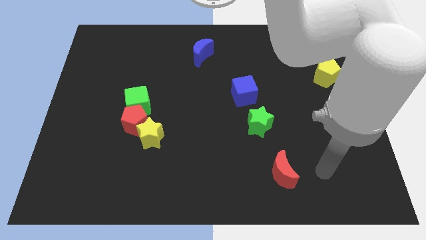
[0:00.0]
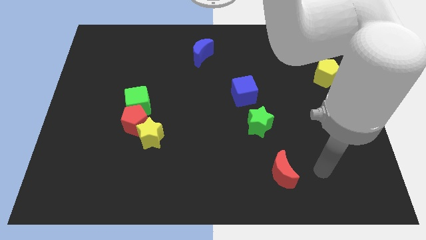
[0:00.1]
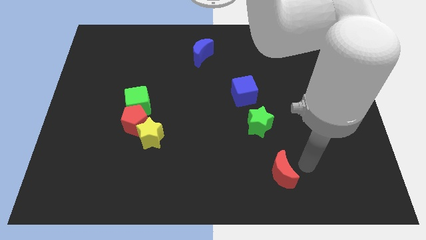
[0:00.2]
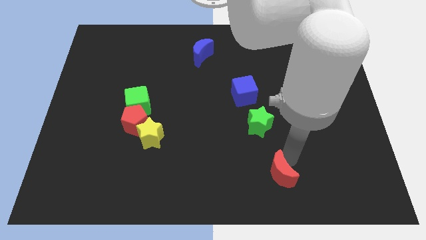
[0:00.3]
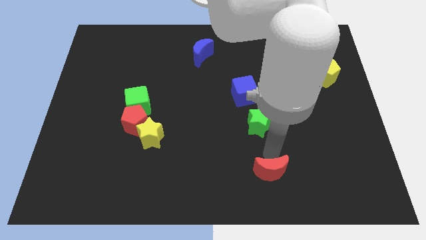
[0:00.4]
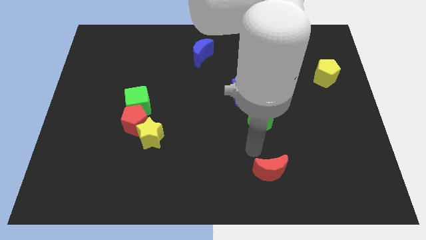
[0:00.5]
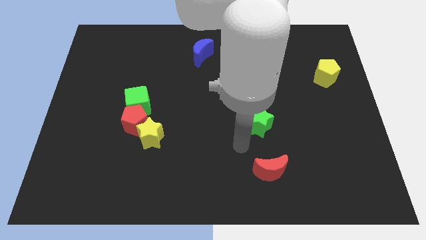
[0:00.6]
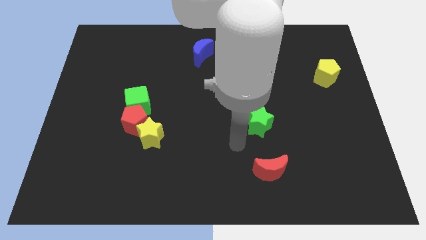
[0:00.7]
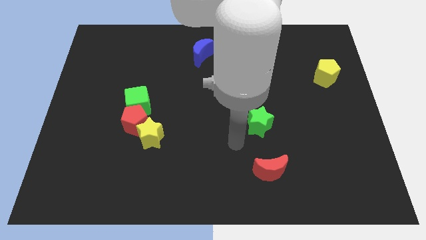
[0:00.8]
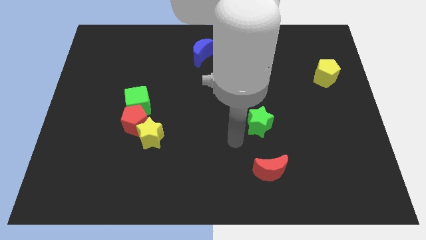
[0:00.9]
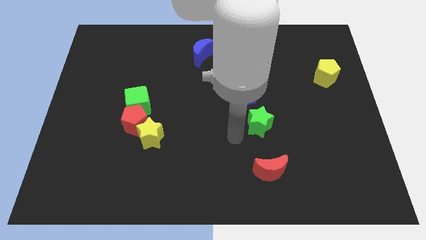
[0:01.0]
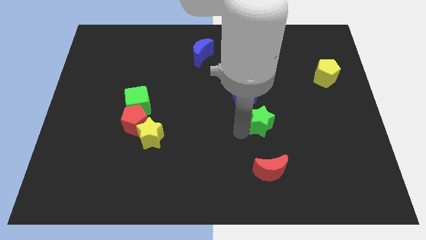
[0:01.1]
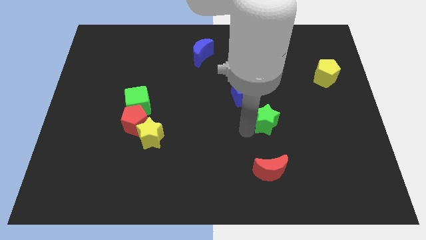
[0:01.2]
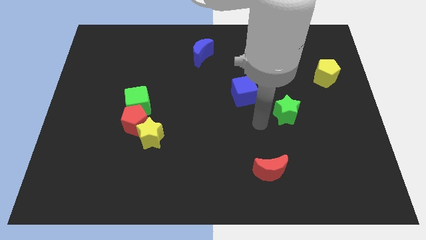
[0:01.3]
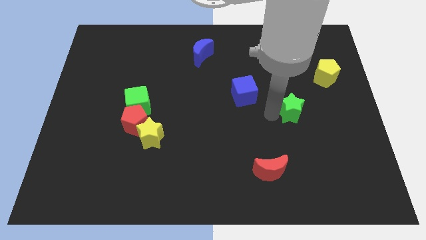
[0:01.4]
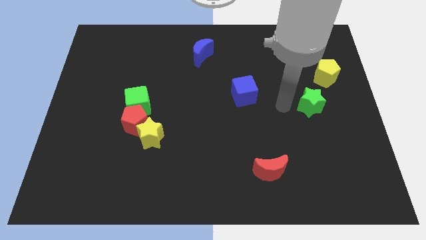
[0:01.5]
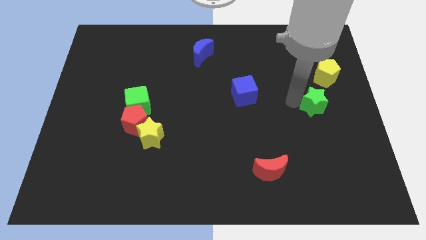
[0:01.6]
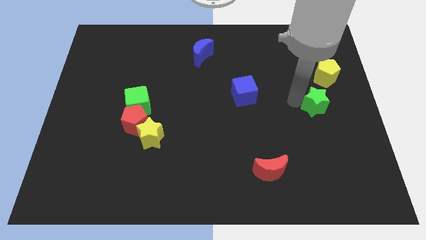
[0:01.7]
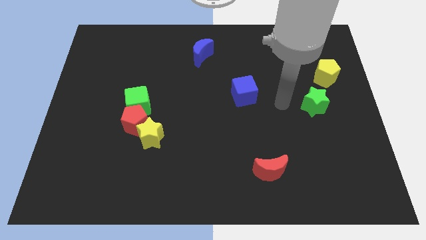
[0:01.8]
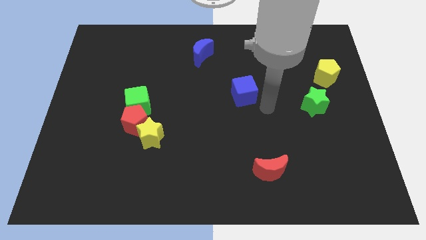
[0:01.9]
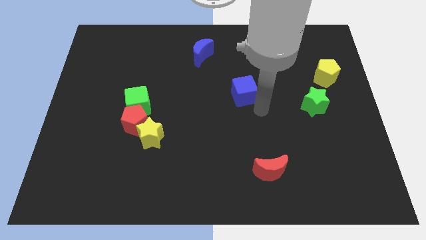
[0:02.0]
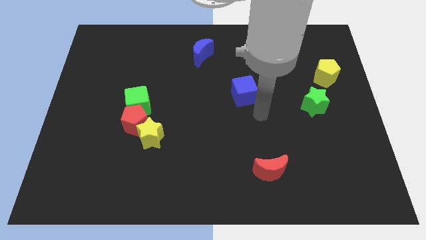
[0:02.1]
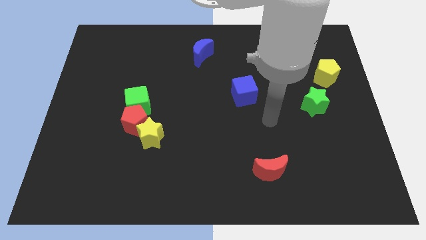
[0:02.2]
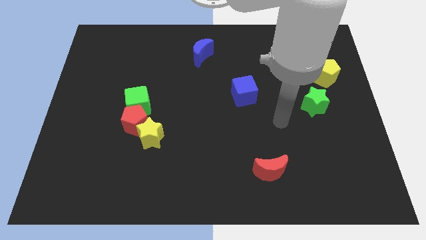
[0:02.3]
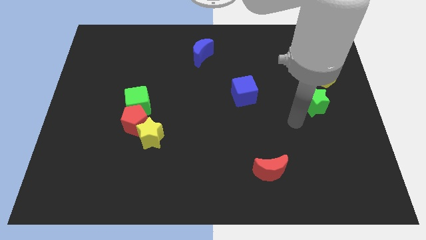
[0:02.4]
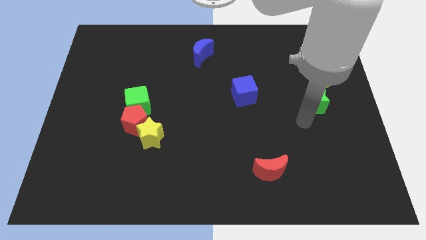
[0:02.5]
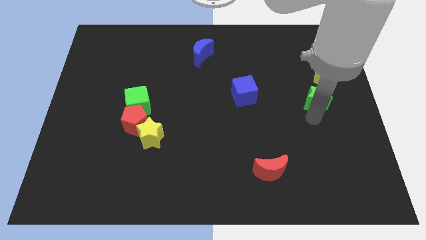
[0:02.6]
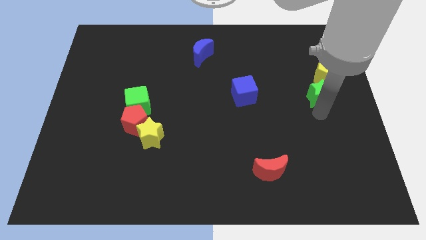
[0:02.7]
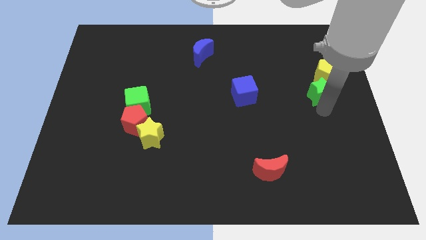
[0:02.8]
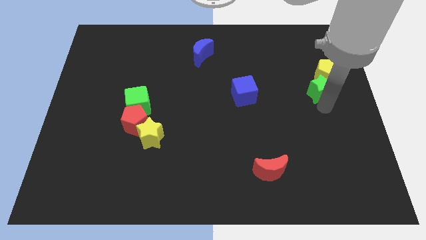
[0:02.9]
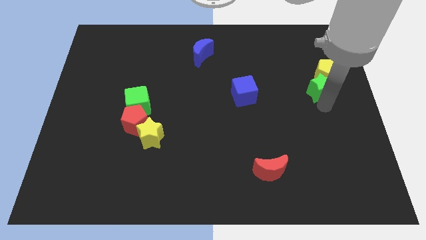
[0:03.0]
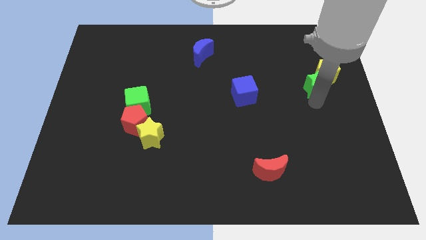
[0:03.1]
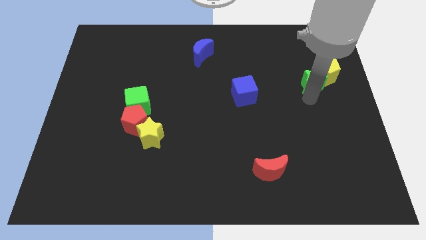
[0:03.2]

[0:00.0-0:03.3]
move green star towards the yellow pentagon

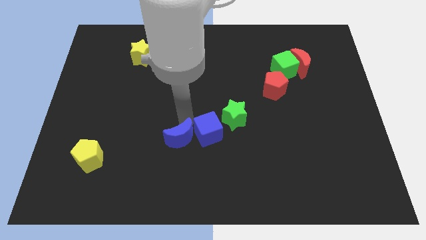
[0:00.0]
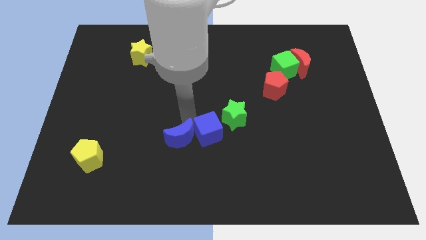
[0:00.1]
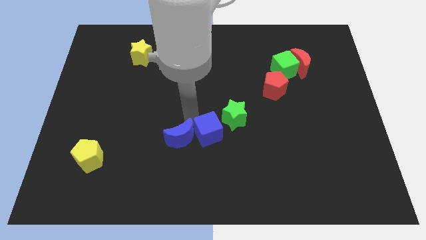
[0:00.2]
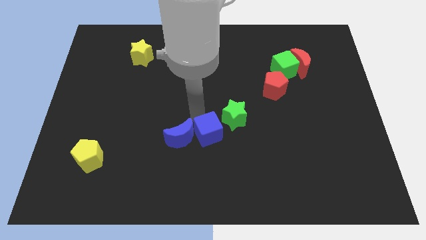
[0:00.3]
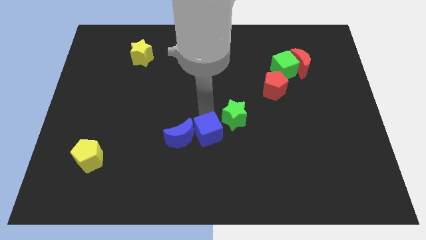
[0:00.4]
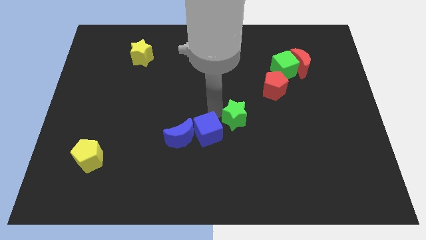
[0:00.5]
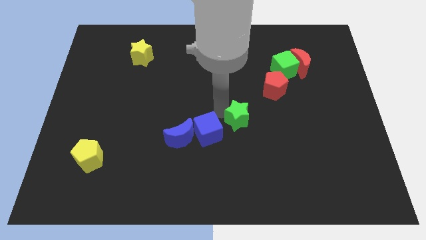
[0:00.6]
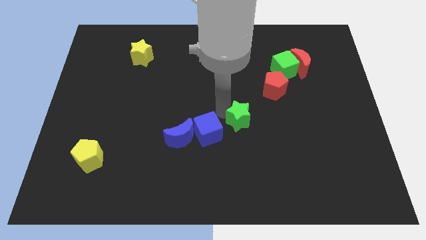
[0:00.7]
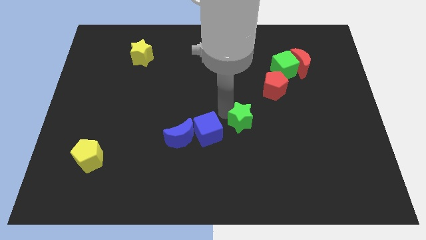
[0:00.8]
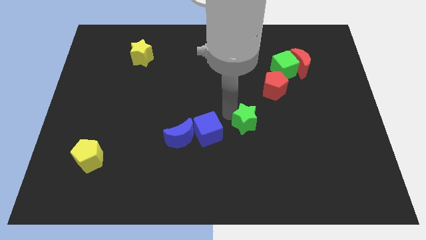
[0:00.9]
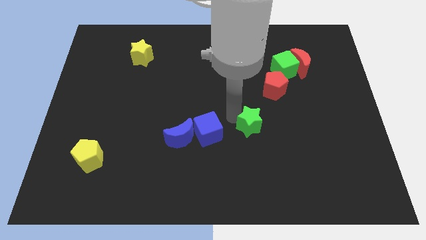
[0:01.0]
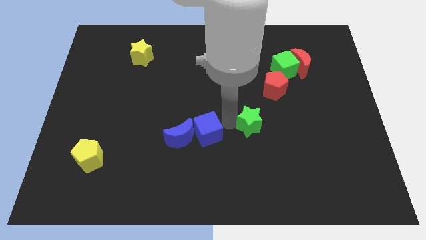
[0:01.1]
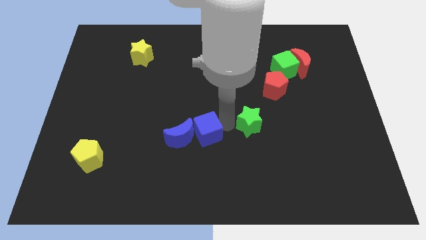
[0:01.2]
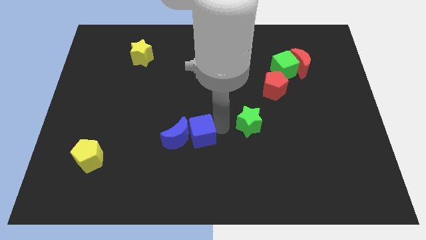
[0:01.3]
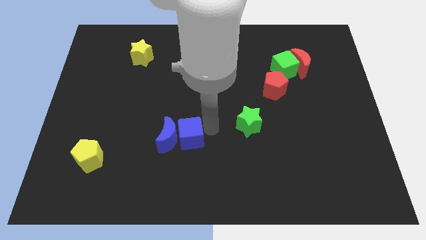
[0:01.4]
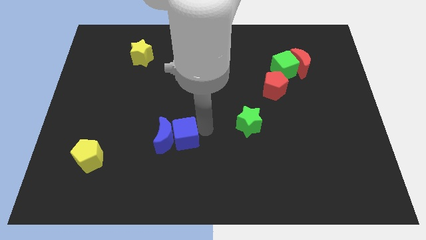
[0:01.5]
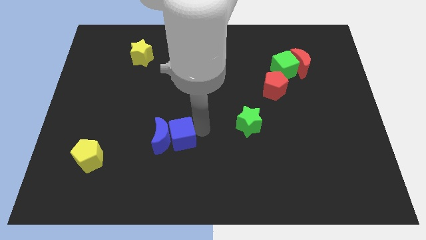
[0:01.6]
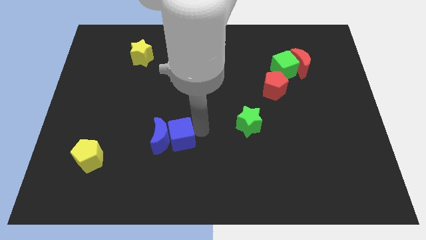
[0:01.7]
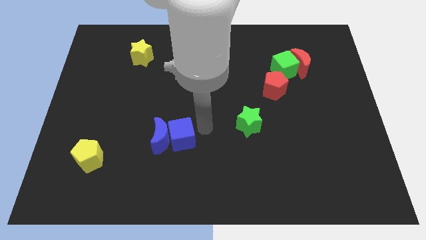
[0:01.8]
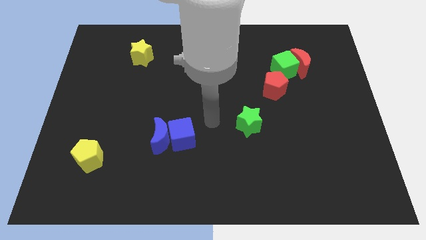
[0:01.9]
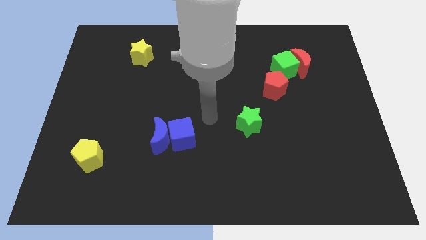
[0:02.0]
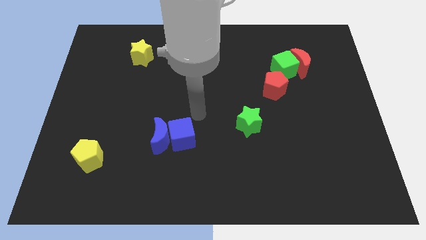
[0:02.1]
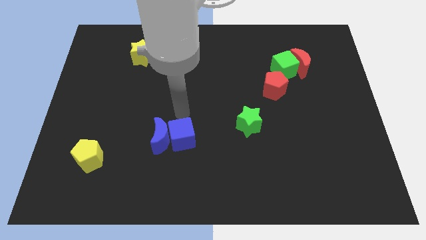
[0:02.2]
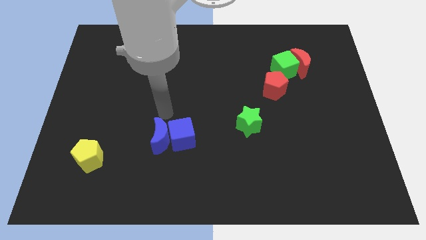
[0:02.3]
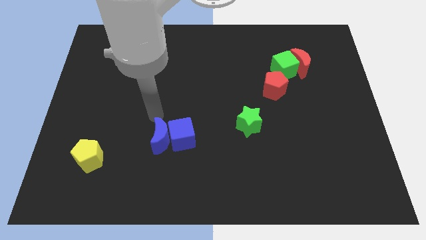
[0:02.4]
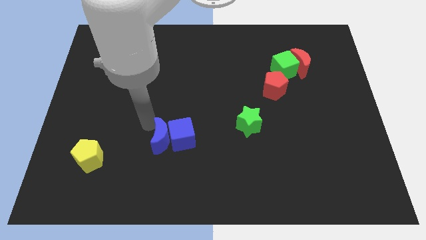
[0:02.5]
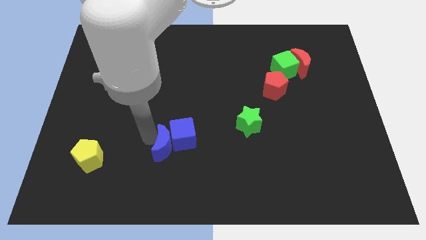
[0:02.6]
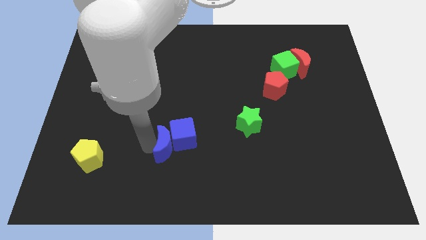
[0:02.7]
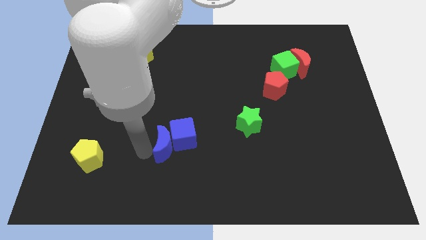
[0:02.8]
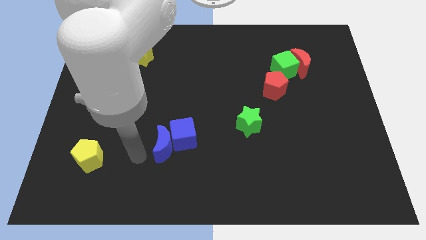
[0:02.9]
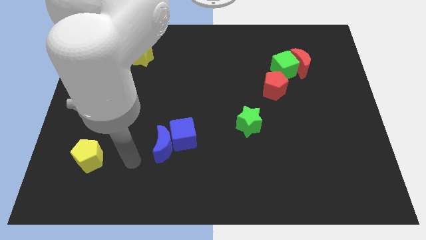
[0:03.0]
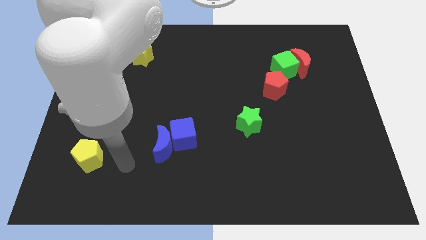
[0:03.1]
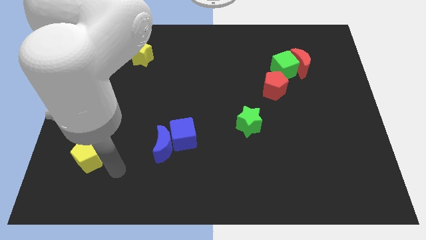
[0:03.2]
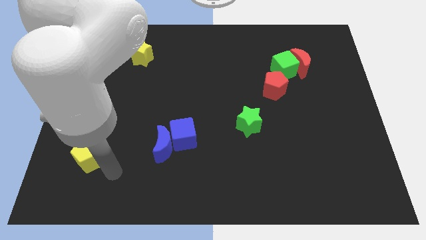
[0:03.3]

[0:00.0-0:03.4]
move your arm to the bottom eight of the yellow pentagon

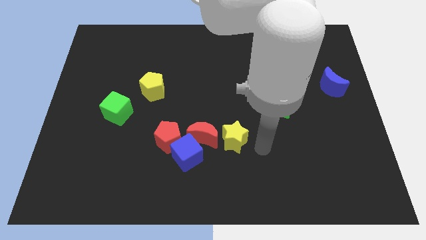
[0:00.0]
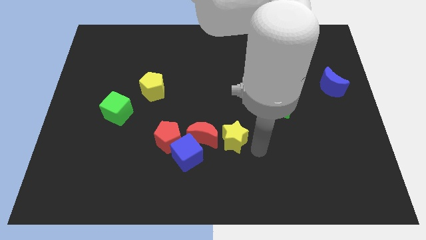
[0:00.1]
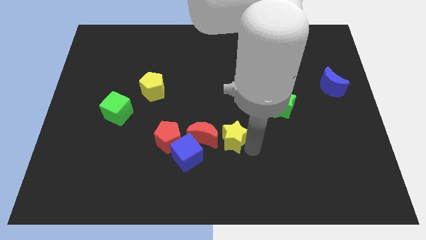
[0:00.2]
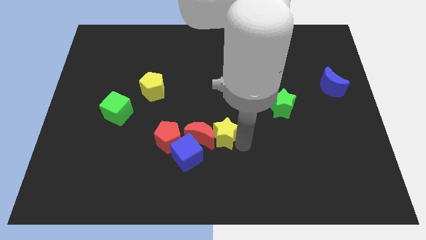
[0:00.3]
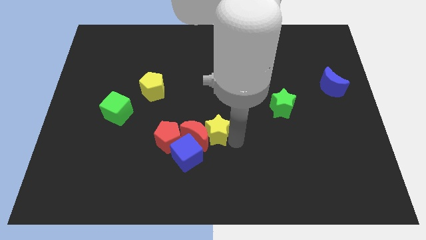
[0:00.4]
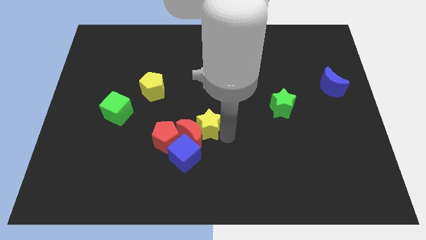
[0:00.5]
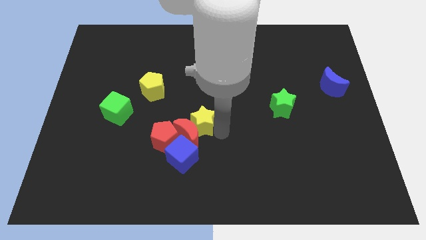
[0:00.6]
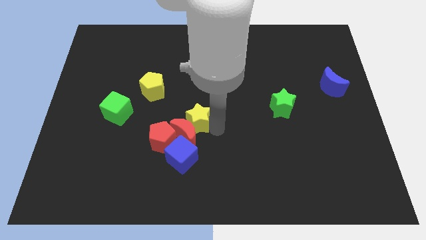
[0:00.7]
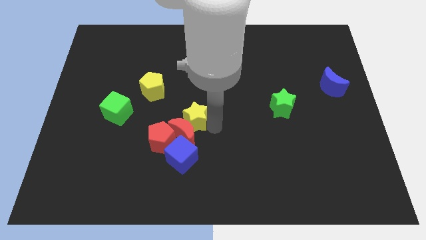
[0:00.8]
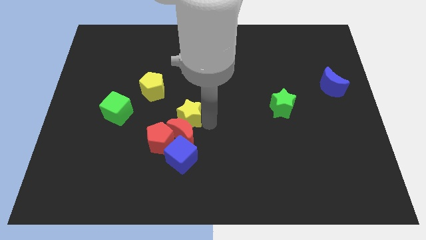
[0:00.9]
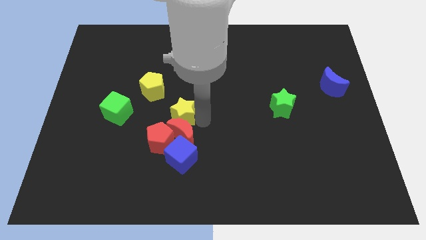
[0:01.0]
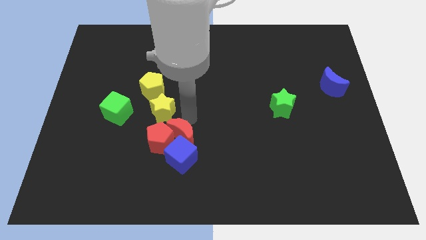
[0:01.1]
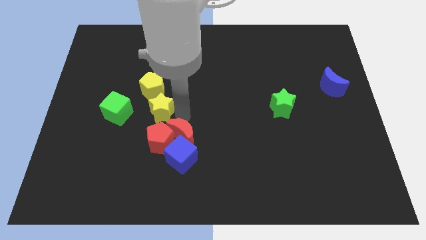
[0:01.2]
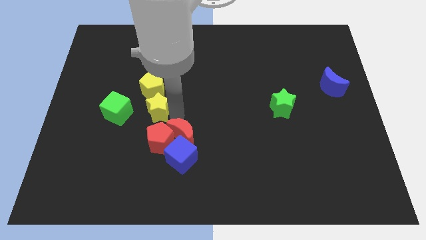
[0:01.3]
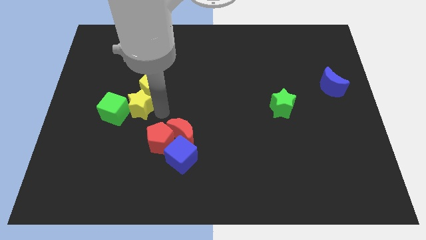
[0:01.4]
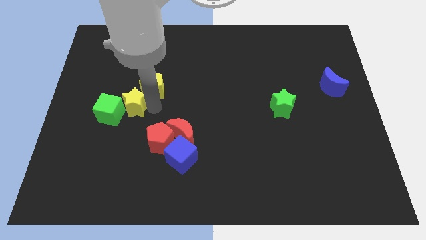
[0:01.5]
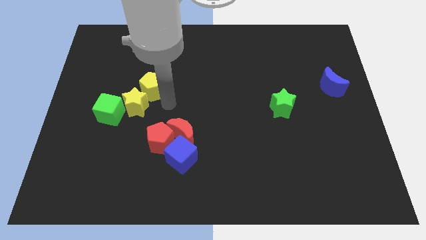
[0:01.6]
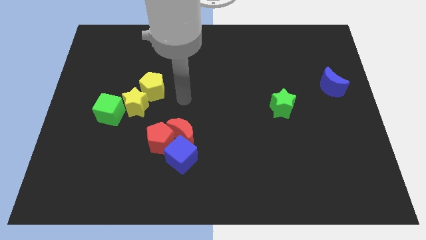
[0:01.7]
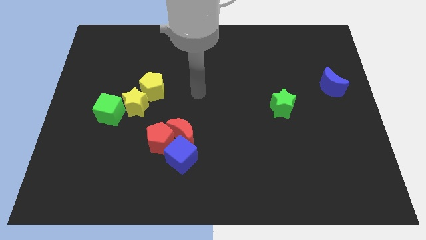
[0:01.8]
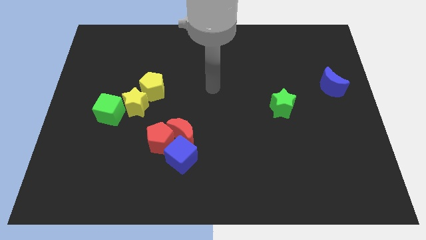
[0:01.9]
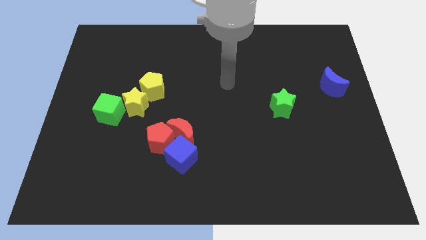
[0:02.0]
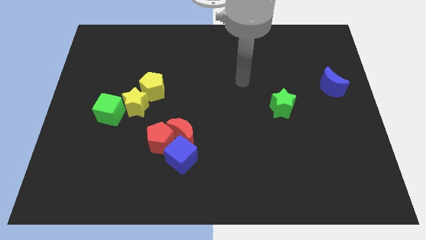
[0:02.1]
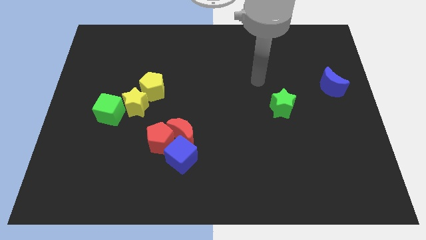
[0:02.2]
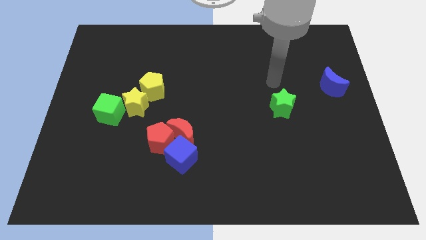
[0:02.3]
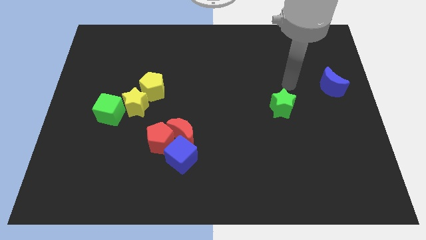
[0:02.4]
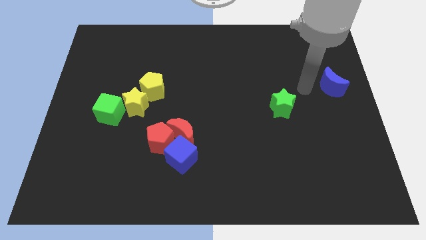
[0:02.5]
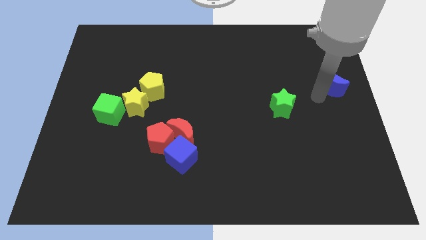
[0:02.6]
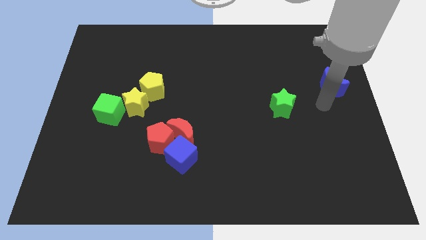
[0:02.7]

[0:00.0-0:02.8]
push the yellow star in between yellow pentagon and green cube
